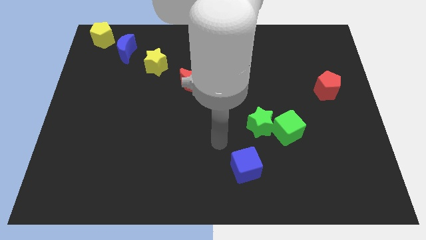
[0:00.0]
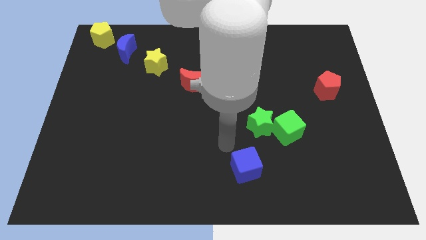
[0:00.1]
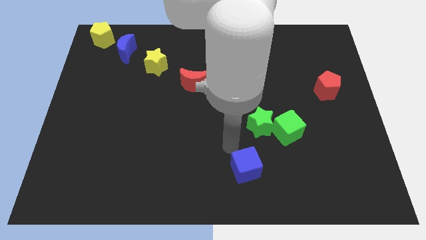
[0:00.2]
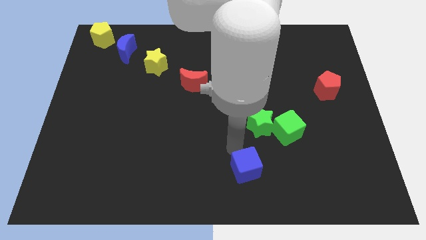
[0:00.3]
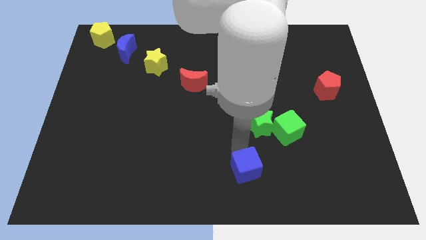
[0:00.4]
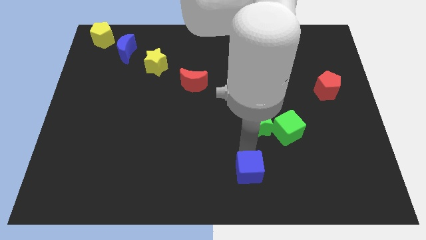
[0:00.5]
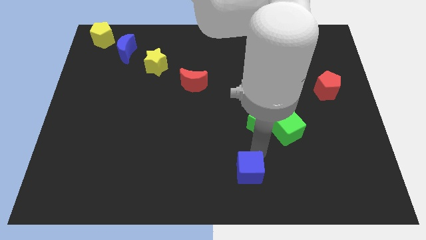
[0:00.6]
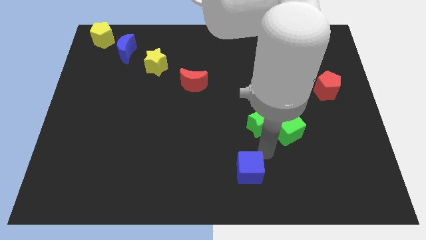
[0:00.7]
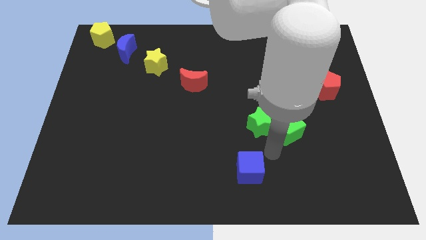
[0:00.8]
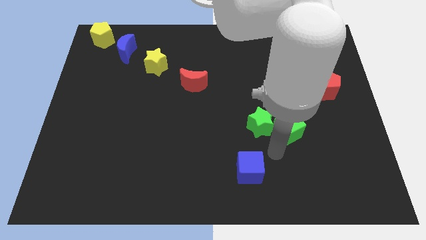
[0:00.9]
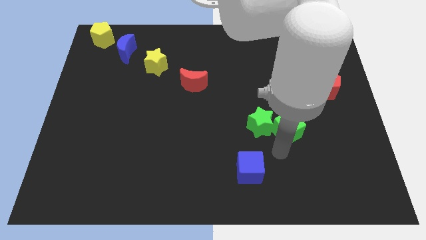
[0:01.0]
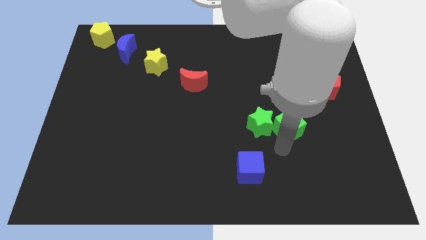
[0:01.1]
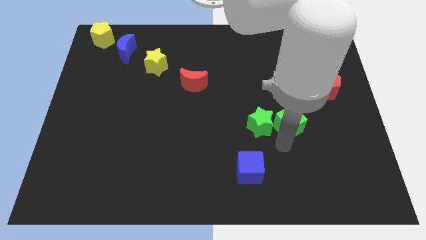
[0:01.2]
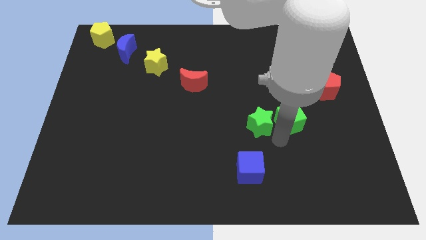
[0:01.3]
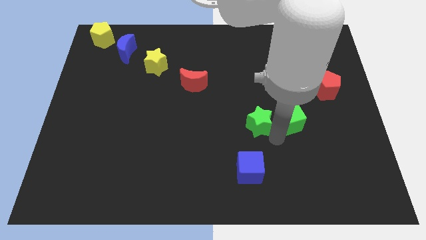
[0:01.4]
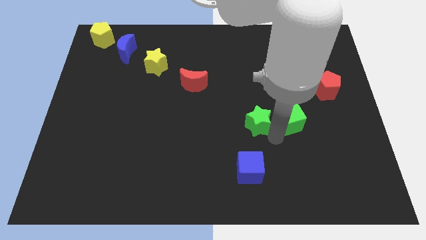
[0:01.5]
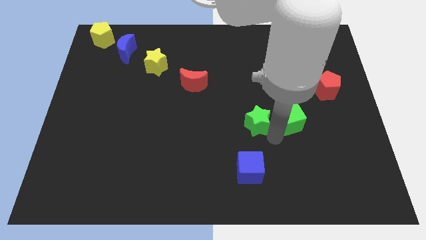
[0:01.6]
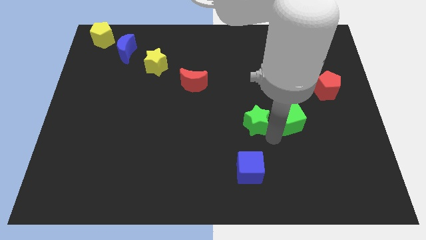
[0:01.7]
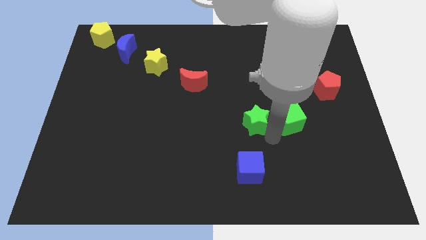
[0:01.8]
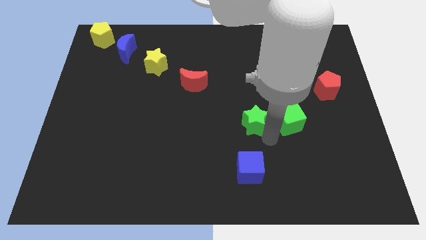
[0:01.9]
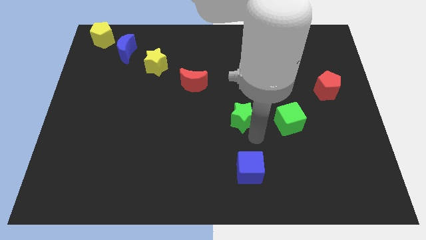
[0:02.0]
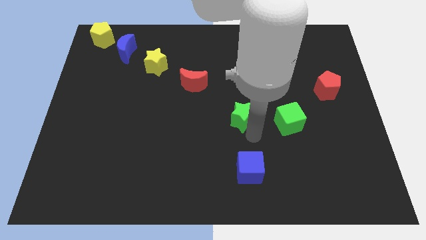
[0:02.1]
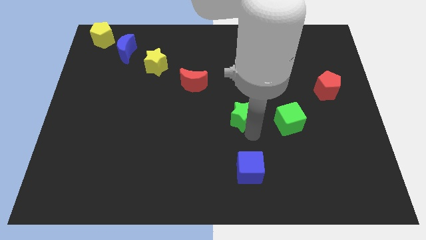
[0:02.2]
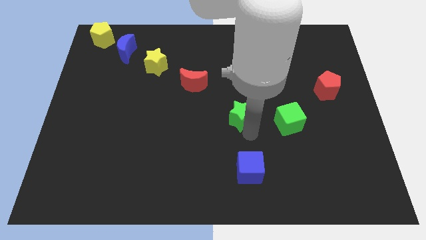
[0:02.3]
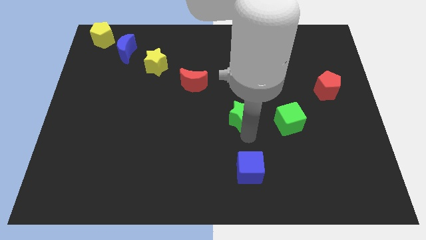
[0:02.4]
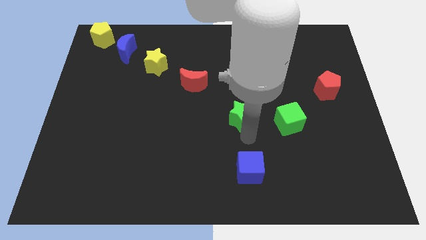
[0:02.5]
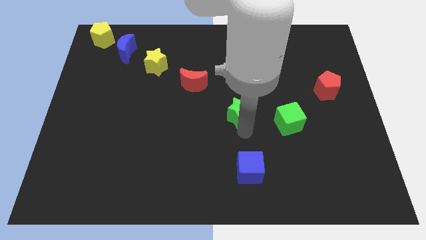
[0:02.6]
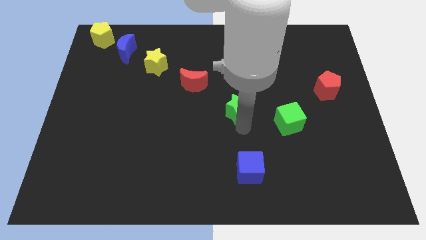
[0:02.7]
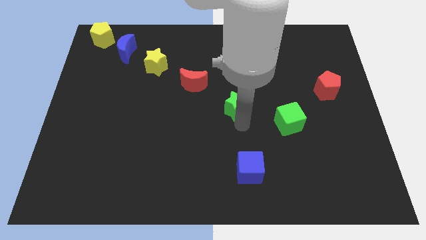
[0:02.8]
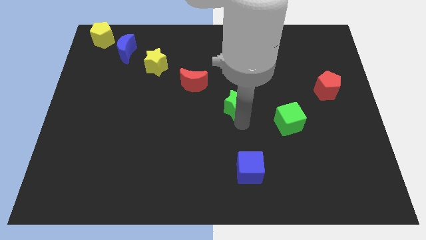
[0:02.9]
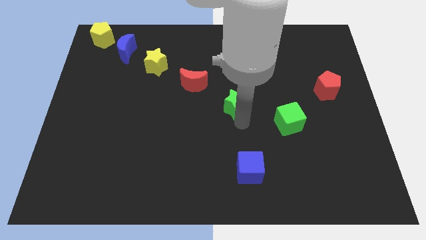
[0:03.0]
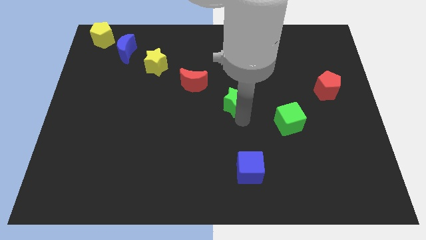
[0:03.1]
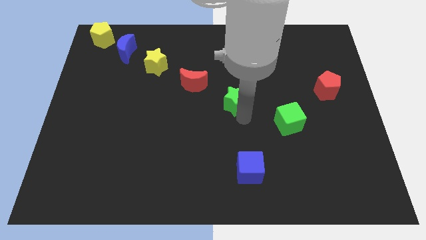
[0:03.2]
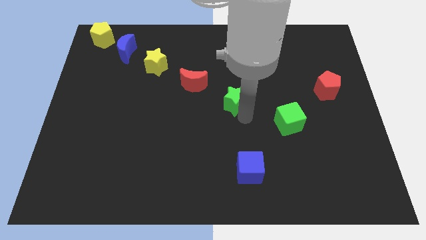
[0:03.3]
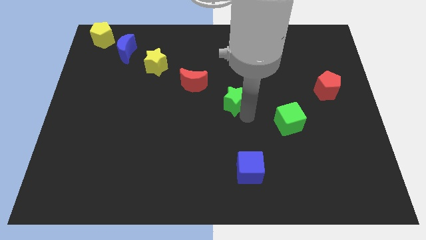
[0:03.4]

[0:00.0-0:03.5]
move the green star diagonal to the red moon

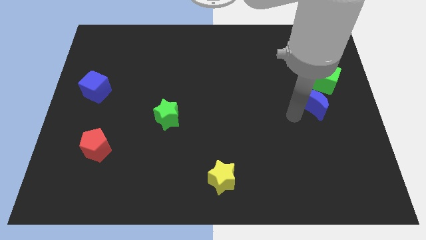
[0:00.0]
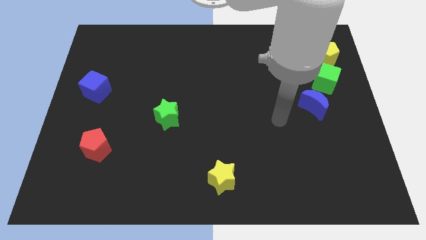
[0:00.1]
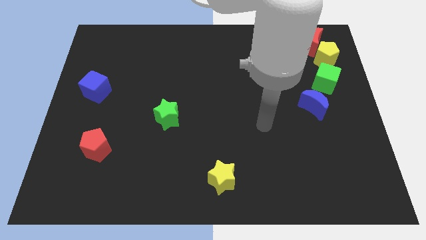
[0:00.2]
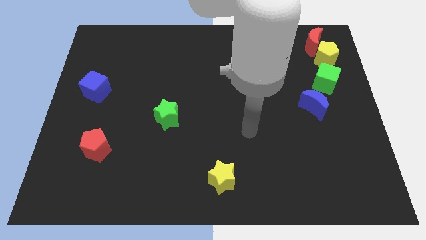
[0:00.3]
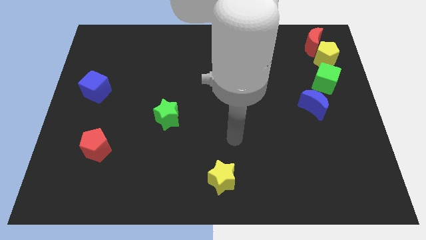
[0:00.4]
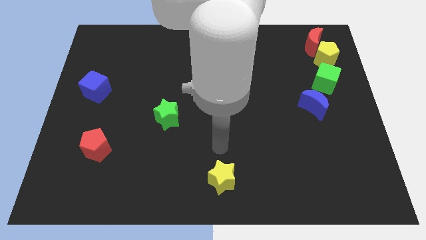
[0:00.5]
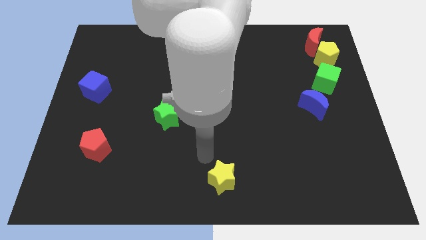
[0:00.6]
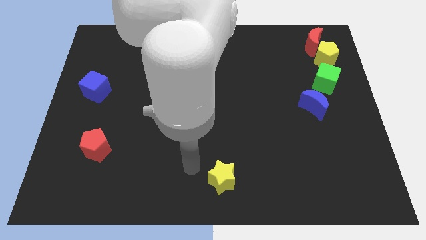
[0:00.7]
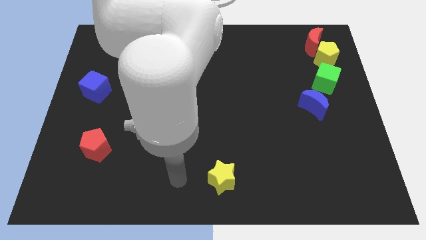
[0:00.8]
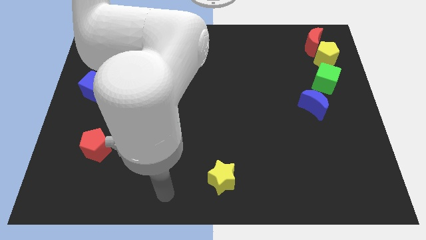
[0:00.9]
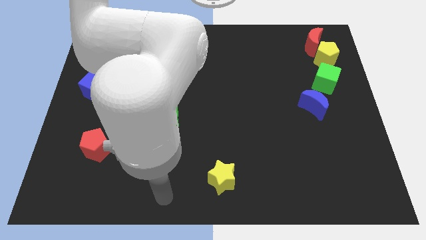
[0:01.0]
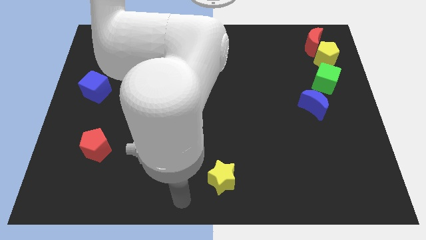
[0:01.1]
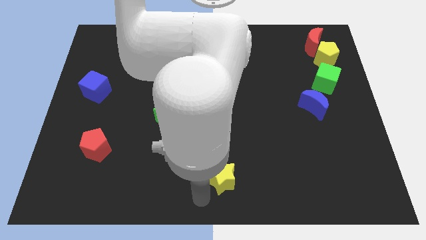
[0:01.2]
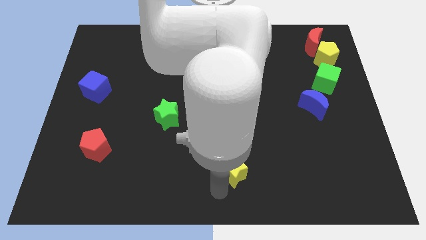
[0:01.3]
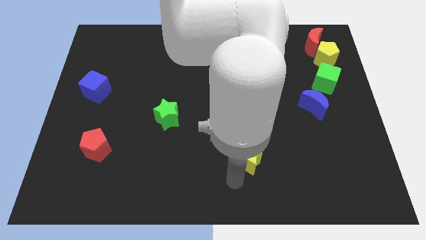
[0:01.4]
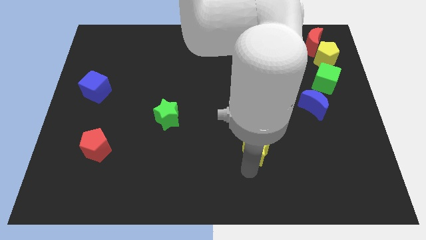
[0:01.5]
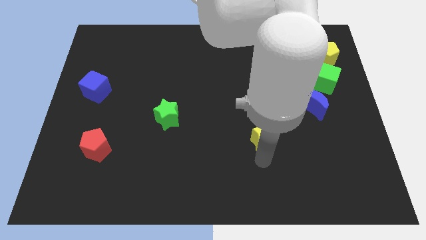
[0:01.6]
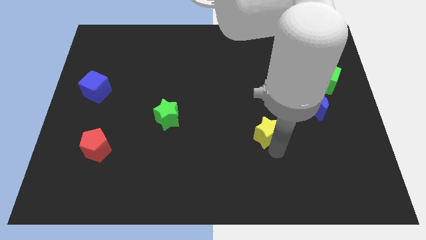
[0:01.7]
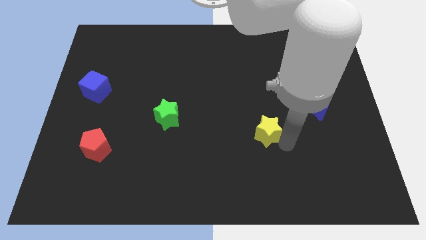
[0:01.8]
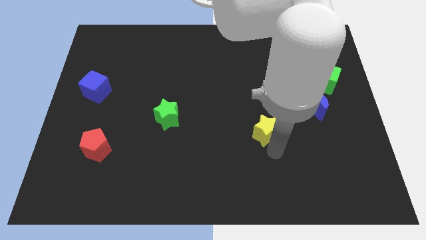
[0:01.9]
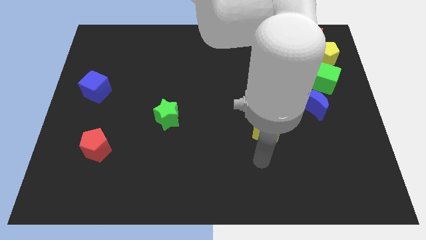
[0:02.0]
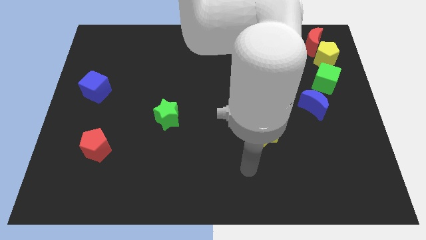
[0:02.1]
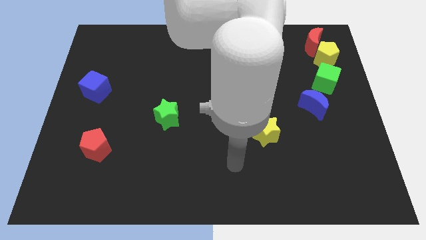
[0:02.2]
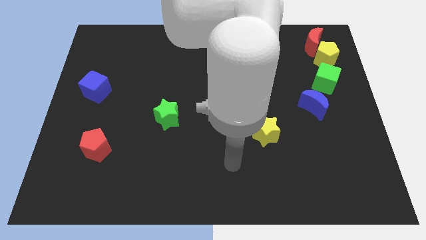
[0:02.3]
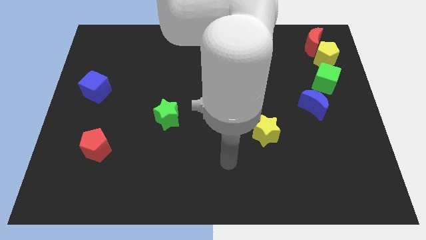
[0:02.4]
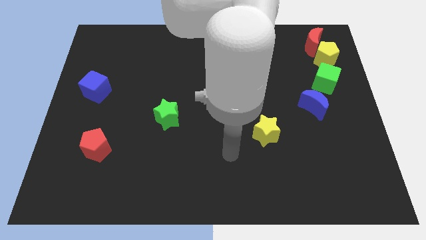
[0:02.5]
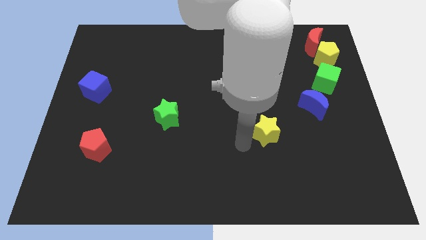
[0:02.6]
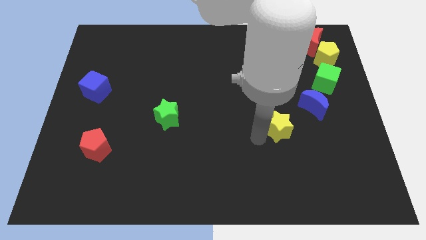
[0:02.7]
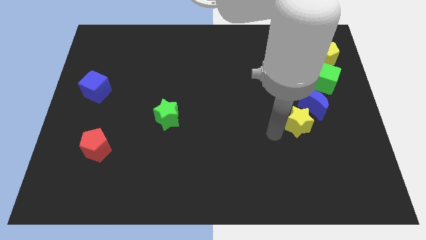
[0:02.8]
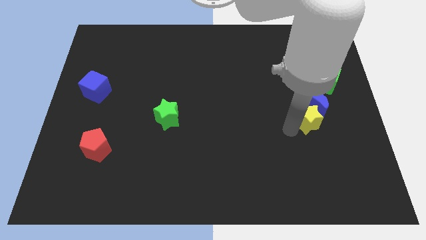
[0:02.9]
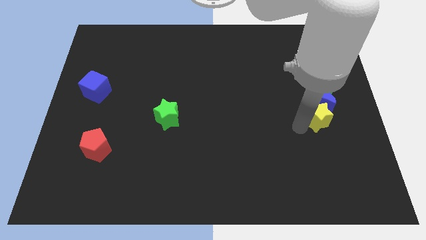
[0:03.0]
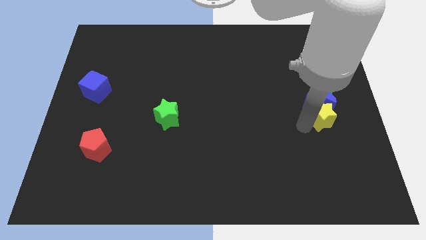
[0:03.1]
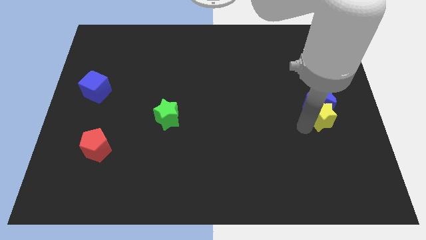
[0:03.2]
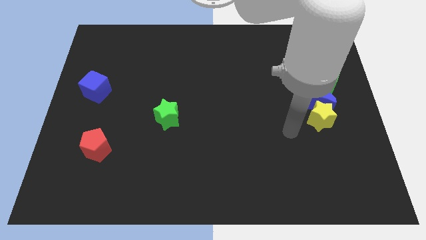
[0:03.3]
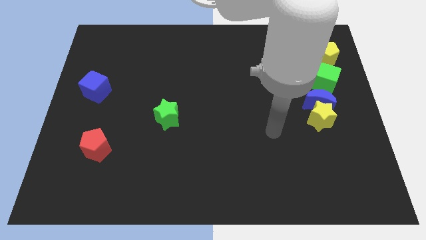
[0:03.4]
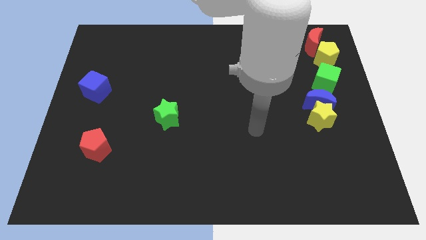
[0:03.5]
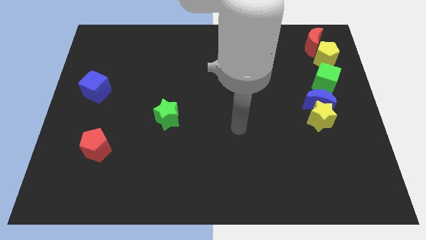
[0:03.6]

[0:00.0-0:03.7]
place the yellow star below the blue crescent

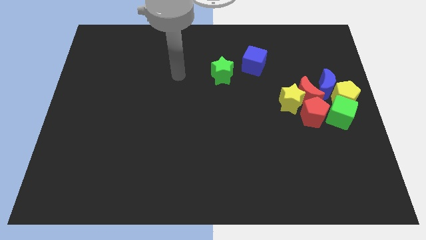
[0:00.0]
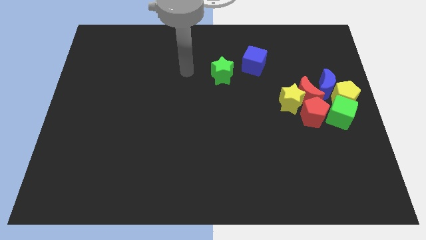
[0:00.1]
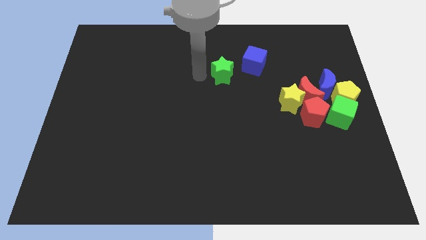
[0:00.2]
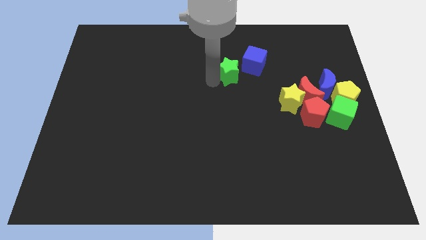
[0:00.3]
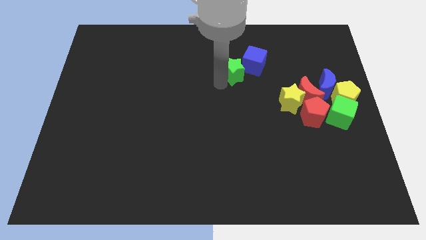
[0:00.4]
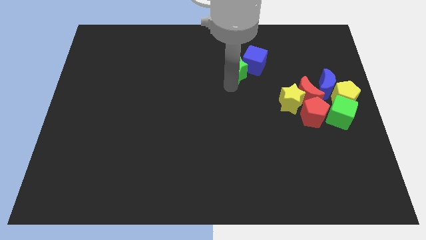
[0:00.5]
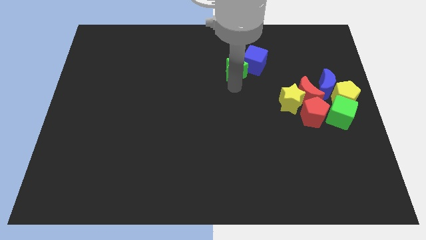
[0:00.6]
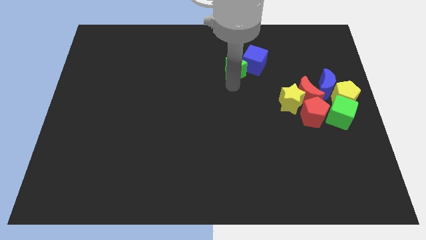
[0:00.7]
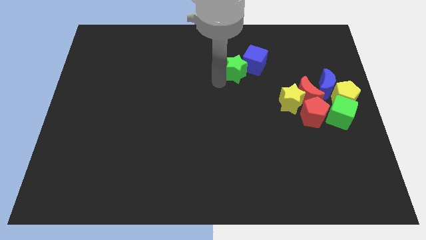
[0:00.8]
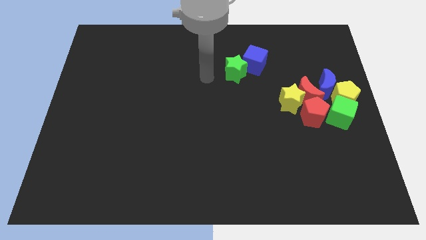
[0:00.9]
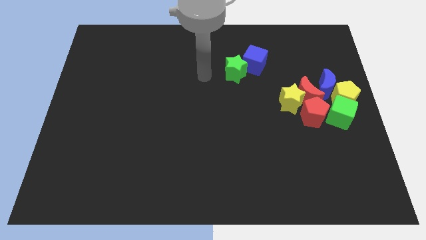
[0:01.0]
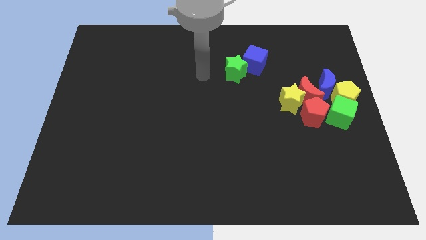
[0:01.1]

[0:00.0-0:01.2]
push the green star to the blue cube

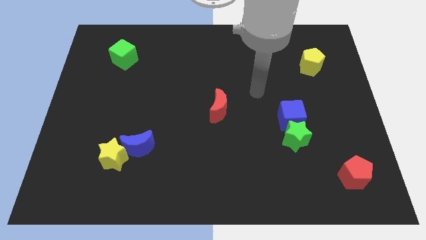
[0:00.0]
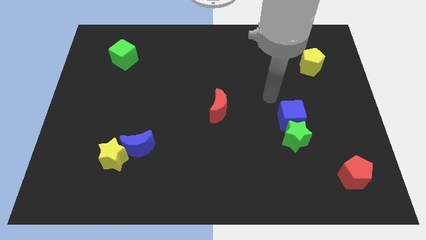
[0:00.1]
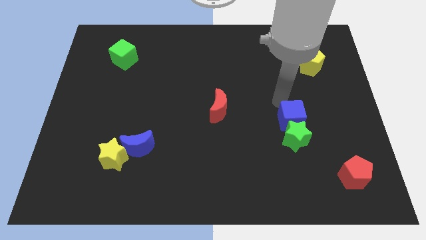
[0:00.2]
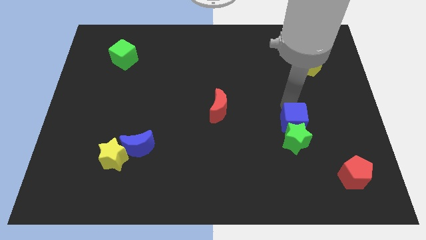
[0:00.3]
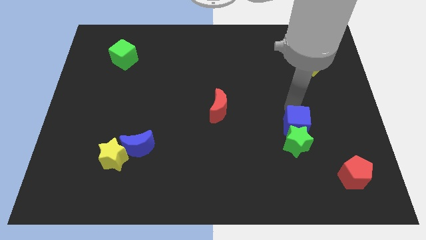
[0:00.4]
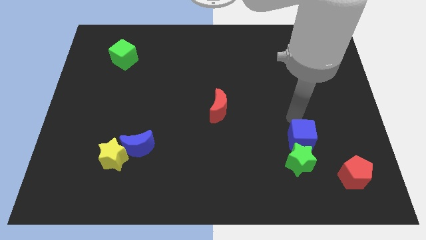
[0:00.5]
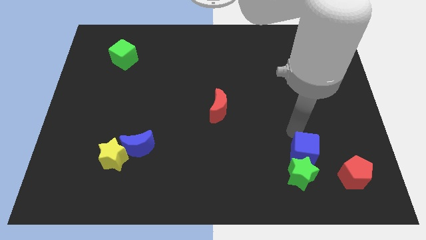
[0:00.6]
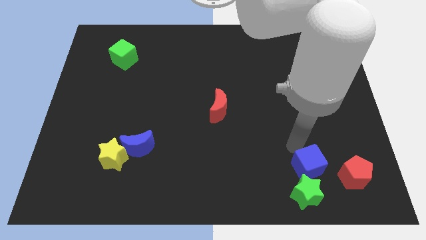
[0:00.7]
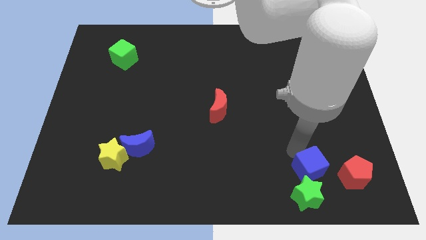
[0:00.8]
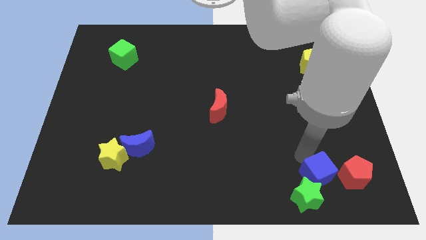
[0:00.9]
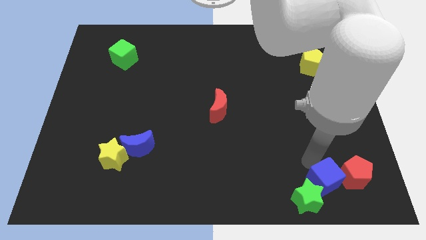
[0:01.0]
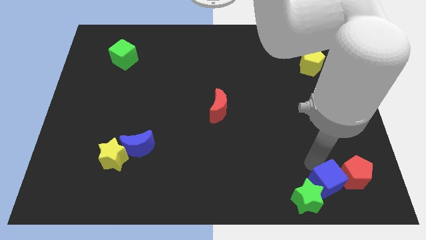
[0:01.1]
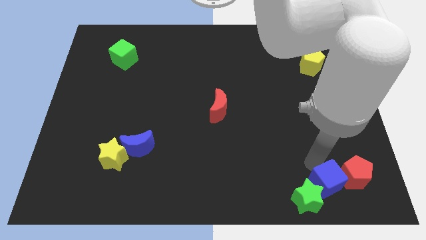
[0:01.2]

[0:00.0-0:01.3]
push the blue cube and green star to the bottom right of the board
